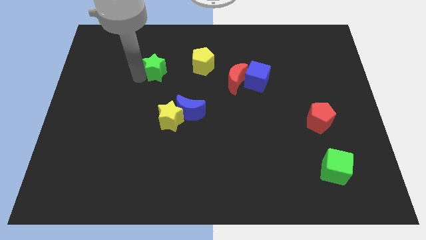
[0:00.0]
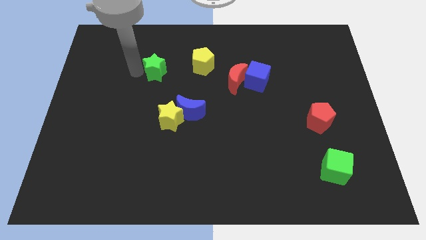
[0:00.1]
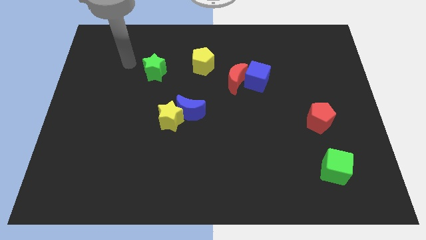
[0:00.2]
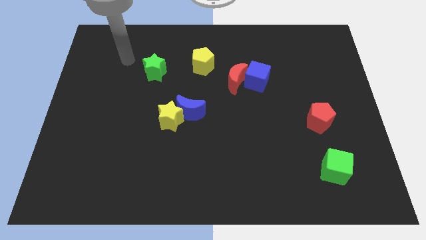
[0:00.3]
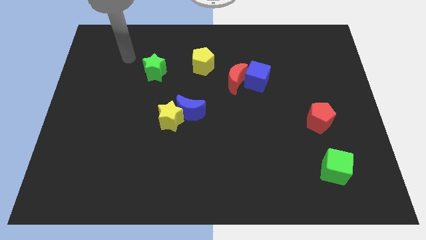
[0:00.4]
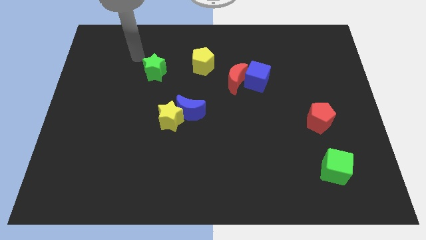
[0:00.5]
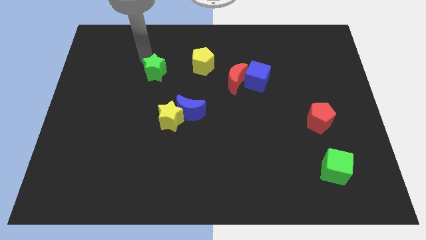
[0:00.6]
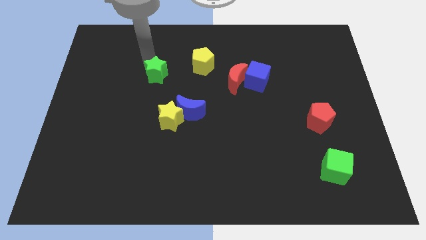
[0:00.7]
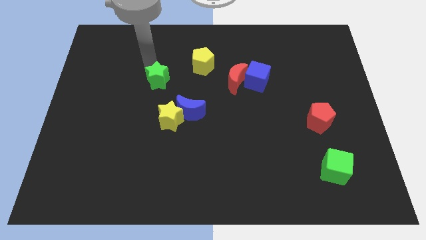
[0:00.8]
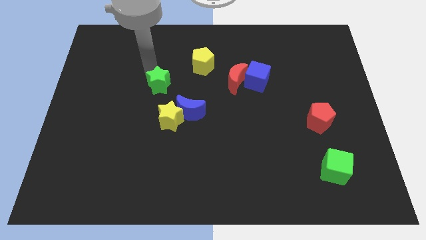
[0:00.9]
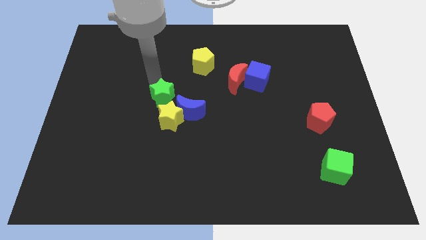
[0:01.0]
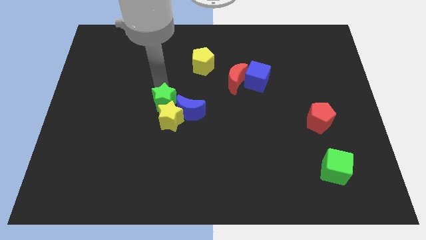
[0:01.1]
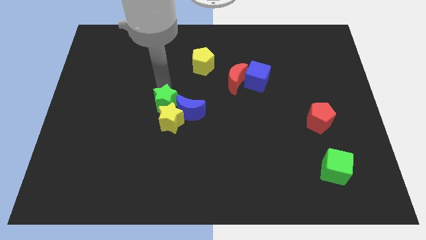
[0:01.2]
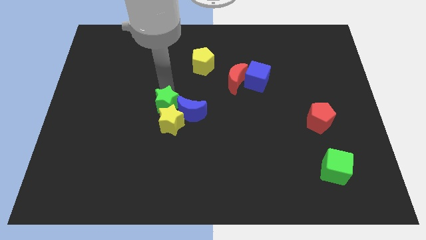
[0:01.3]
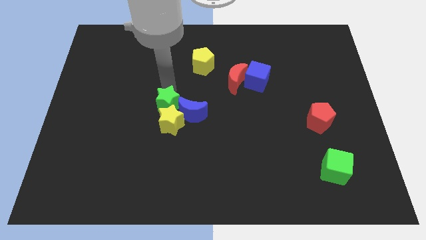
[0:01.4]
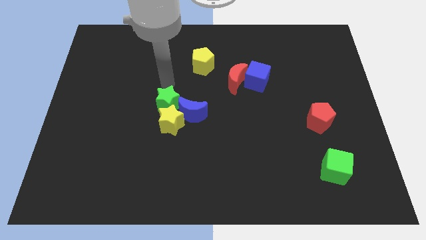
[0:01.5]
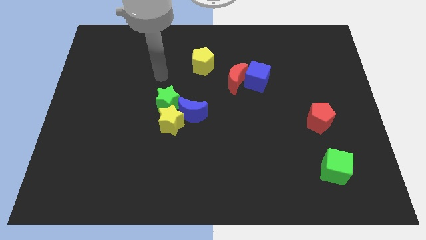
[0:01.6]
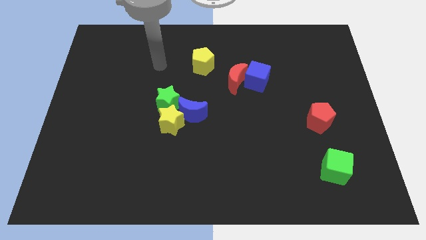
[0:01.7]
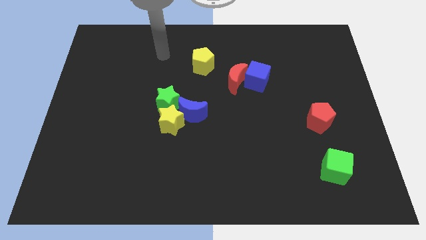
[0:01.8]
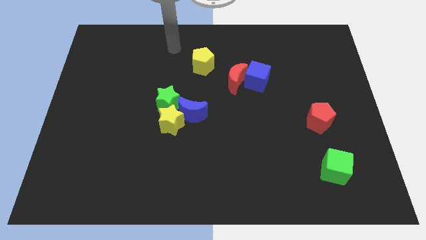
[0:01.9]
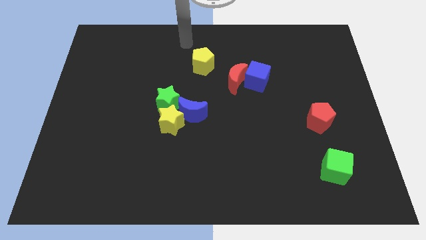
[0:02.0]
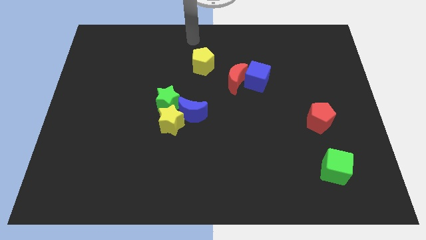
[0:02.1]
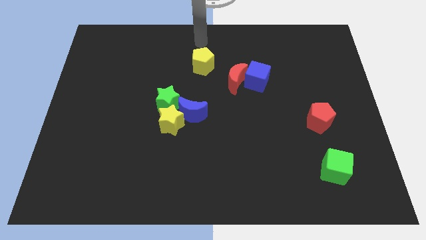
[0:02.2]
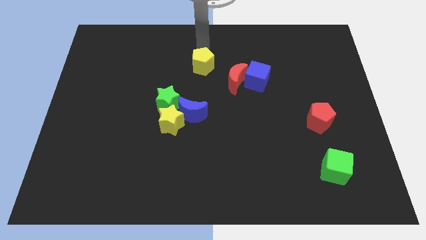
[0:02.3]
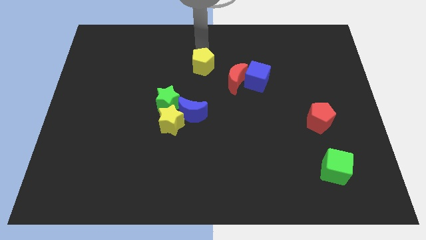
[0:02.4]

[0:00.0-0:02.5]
push the green star into the yellow star and the blue crescent

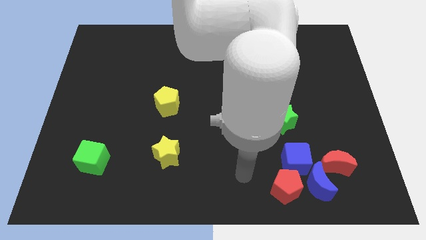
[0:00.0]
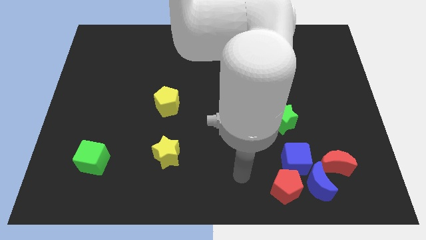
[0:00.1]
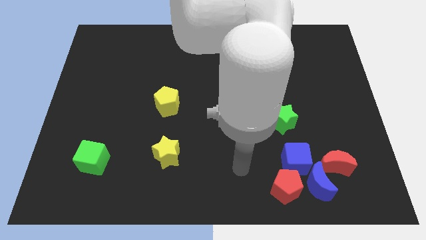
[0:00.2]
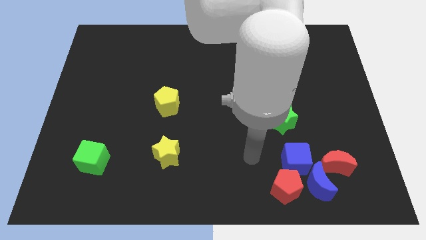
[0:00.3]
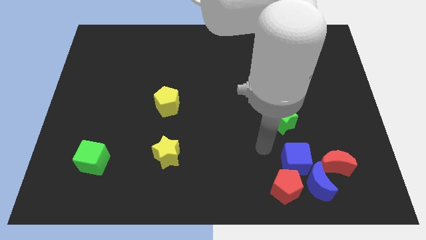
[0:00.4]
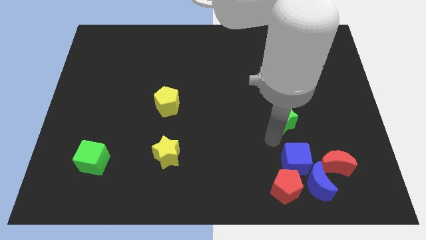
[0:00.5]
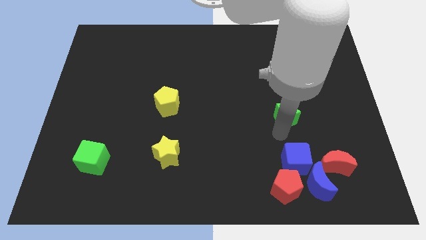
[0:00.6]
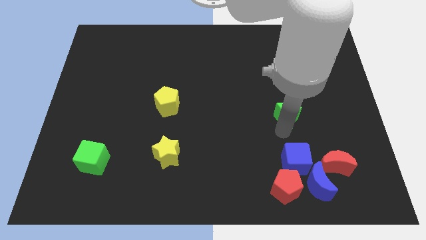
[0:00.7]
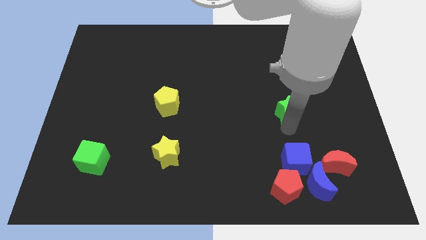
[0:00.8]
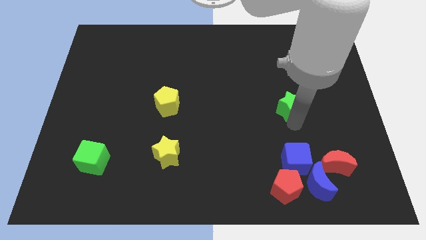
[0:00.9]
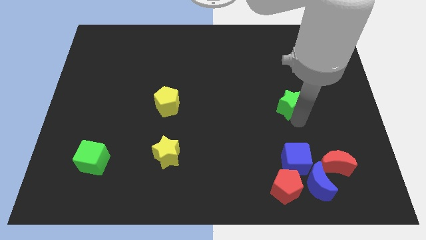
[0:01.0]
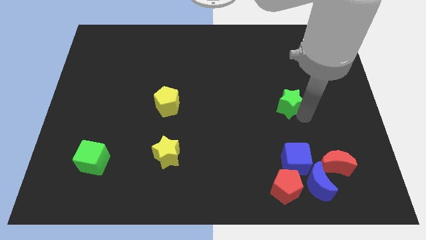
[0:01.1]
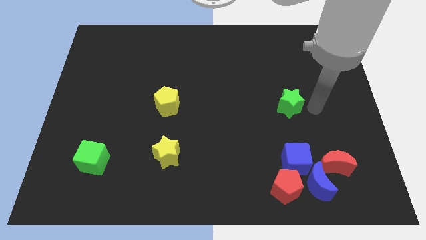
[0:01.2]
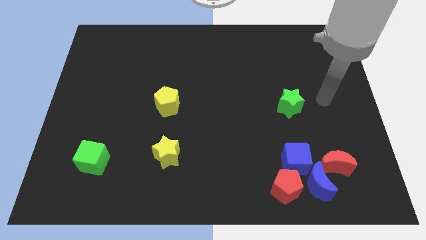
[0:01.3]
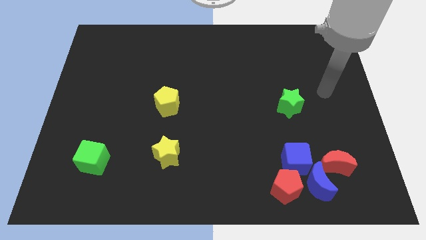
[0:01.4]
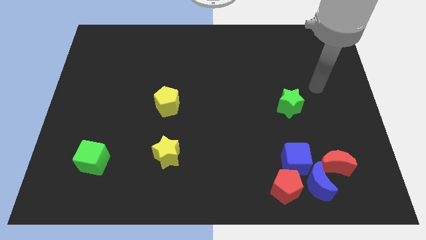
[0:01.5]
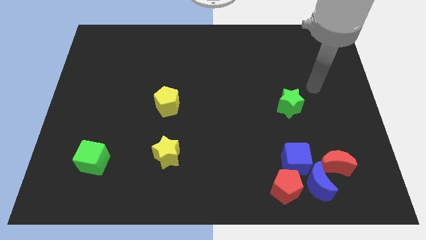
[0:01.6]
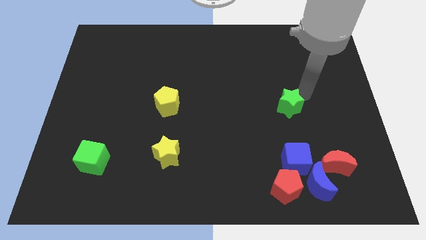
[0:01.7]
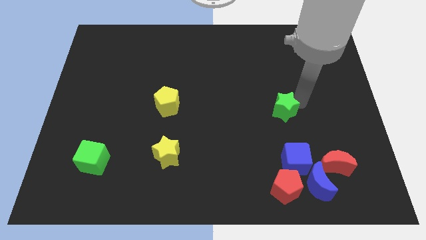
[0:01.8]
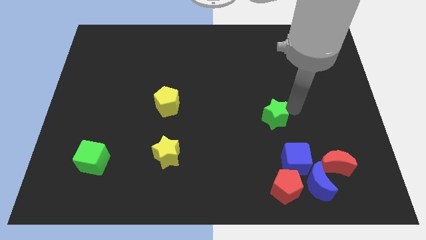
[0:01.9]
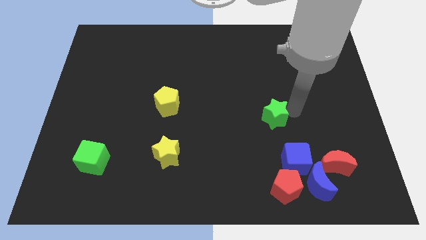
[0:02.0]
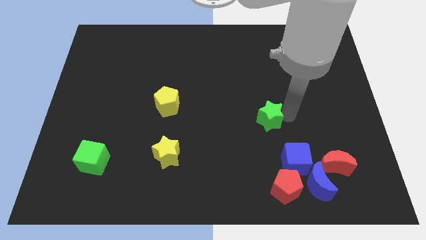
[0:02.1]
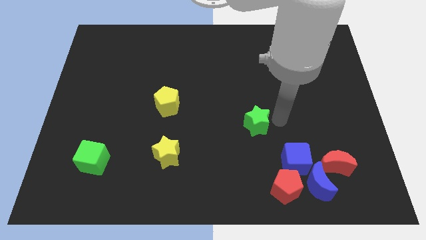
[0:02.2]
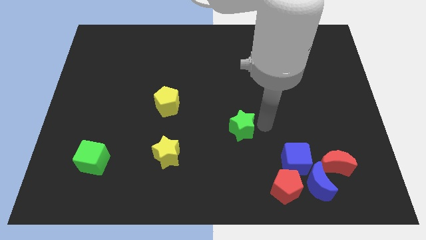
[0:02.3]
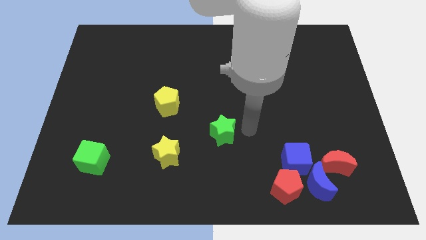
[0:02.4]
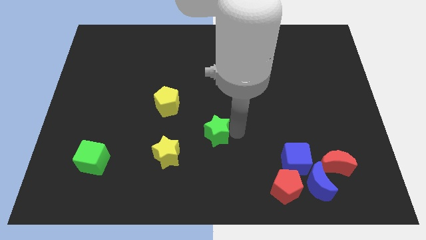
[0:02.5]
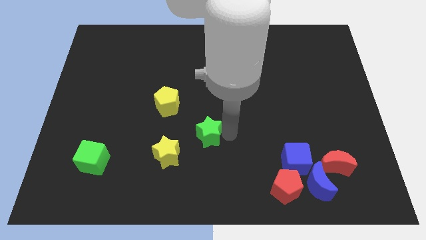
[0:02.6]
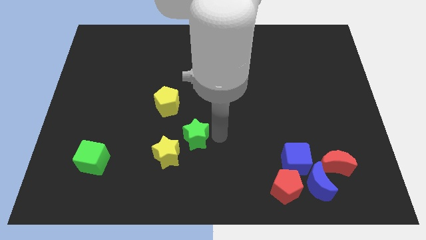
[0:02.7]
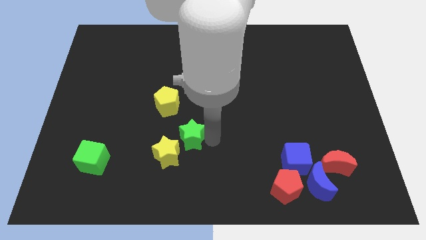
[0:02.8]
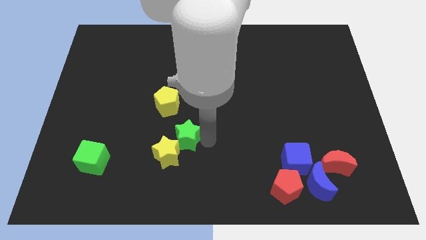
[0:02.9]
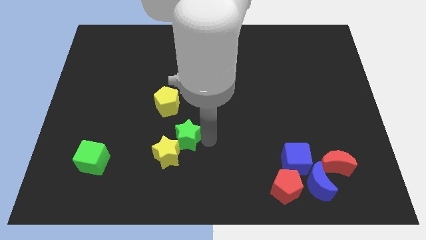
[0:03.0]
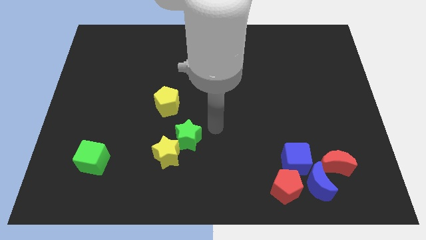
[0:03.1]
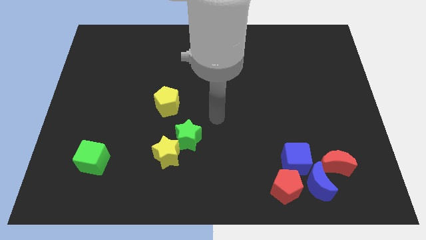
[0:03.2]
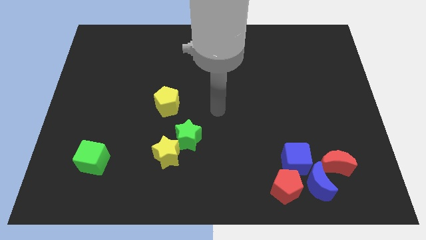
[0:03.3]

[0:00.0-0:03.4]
push the green star into yellow star

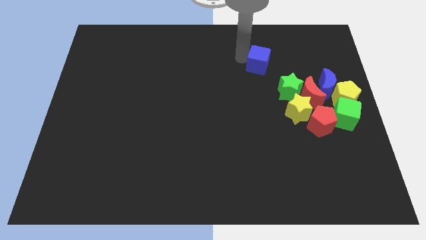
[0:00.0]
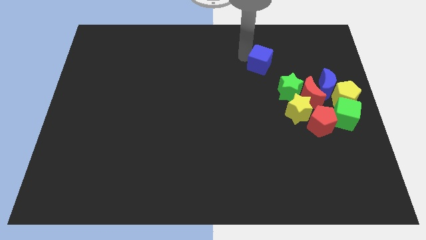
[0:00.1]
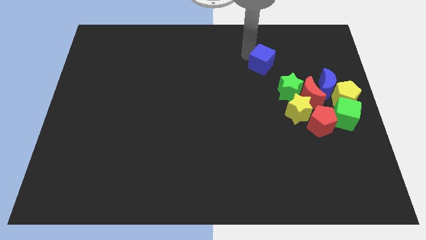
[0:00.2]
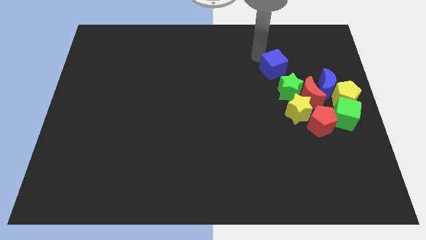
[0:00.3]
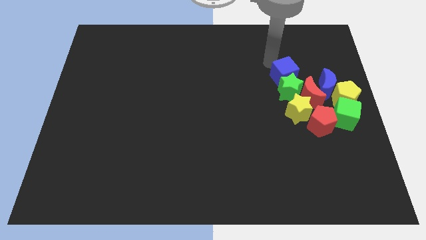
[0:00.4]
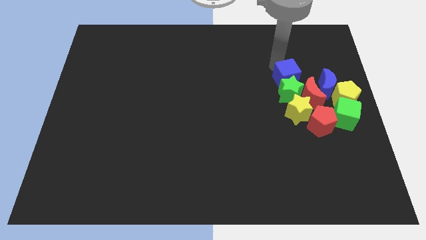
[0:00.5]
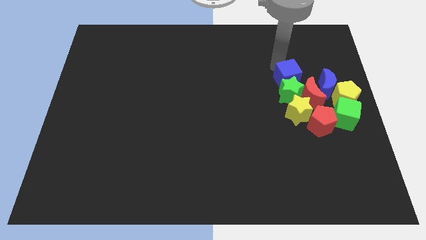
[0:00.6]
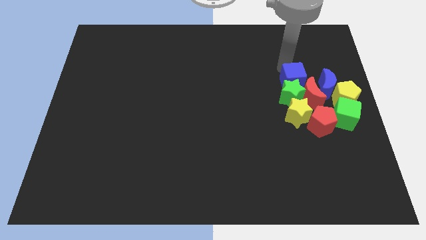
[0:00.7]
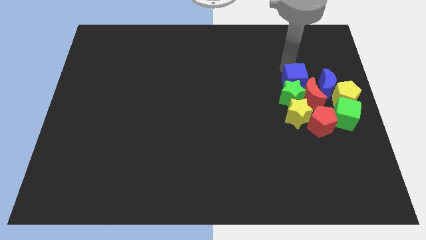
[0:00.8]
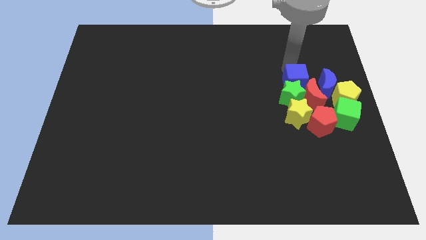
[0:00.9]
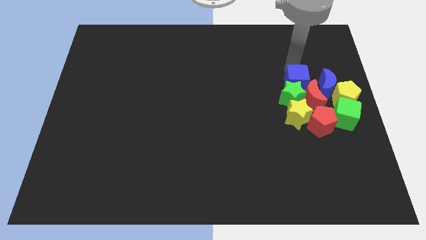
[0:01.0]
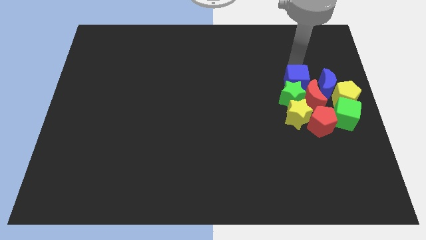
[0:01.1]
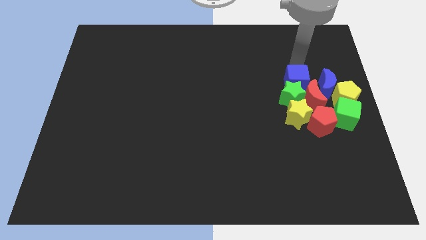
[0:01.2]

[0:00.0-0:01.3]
move the blue cube above the green star

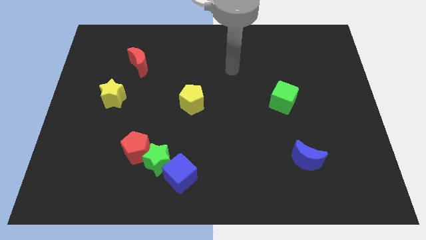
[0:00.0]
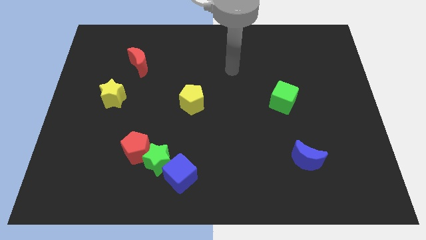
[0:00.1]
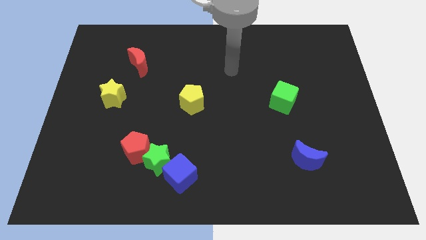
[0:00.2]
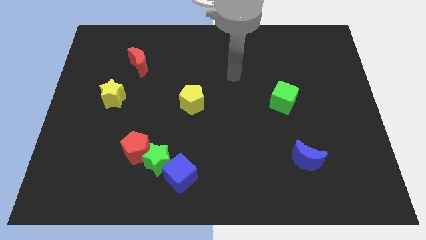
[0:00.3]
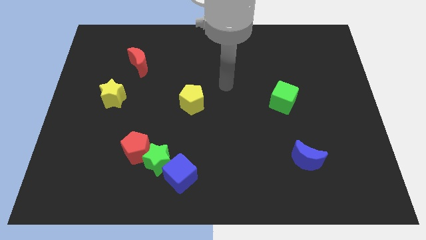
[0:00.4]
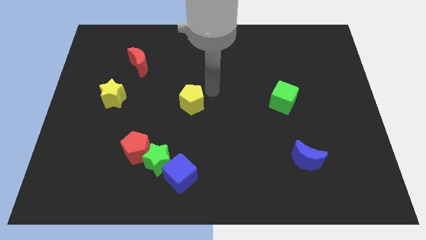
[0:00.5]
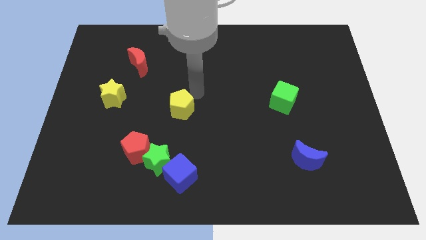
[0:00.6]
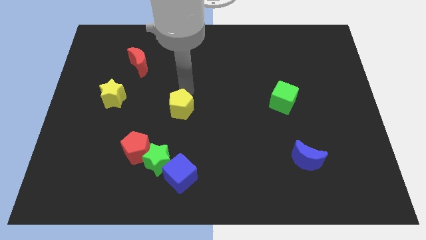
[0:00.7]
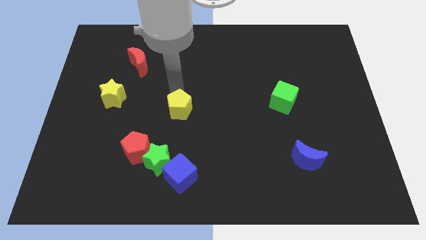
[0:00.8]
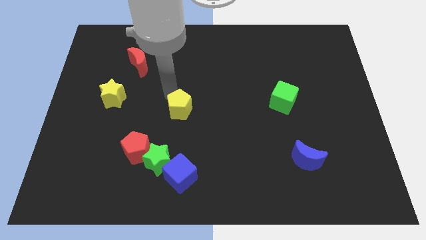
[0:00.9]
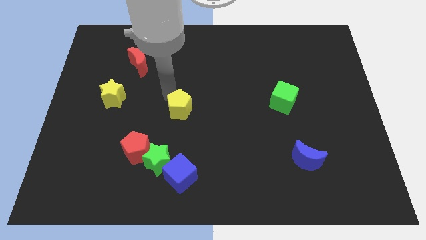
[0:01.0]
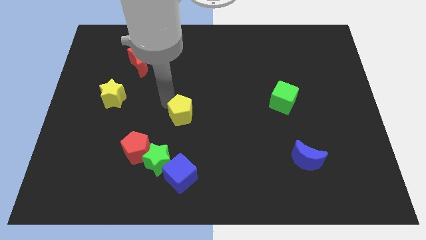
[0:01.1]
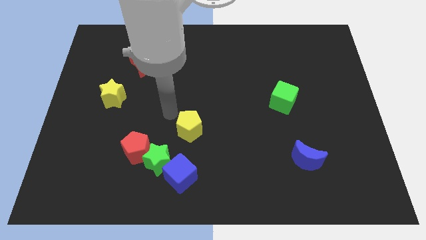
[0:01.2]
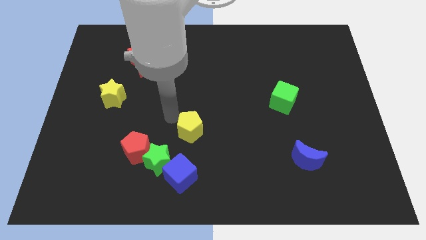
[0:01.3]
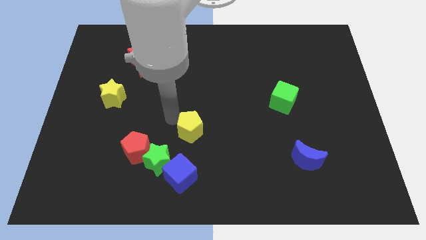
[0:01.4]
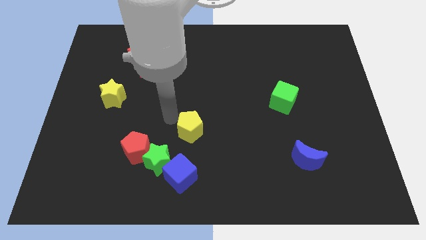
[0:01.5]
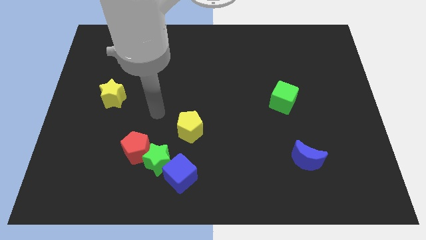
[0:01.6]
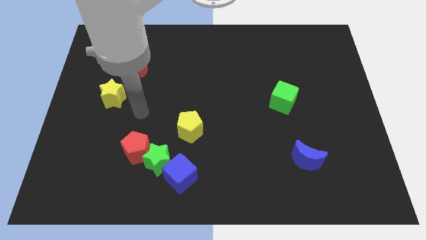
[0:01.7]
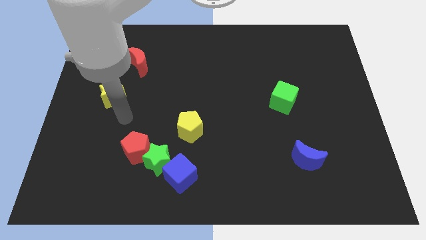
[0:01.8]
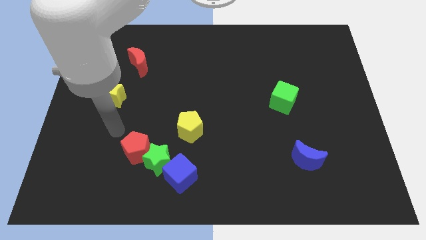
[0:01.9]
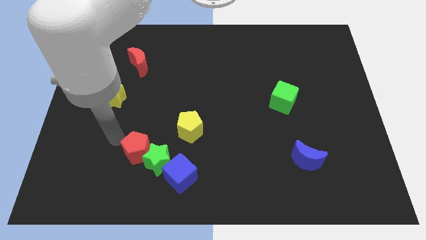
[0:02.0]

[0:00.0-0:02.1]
move yellow pentagonetowards the green cube
